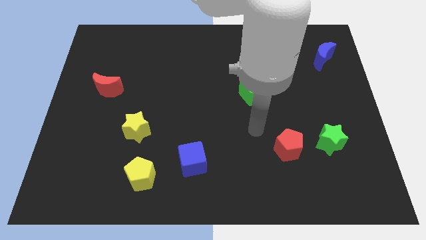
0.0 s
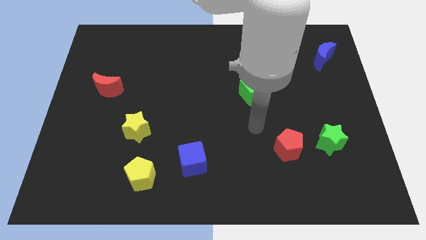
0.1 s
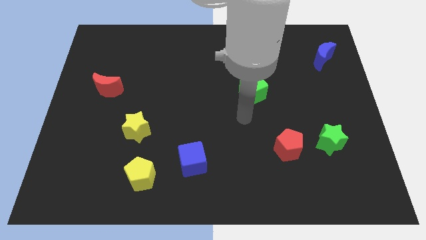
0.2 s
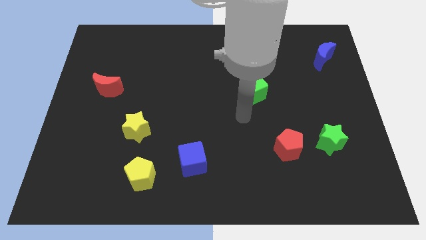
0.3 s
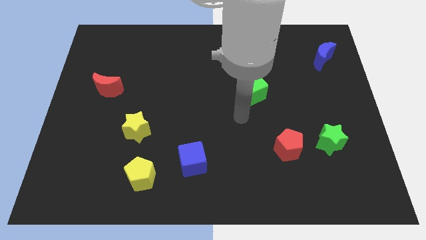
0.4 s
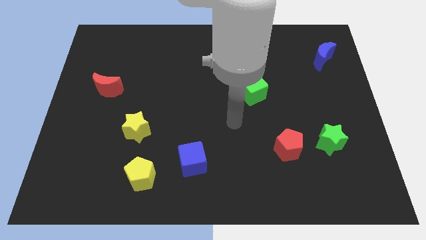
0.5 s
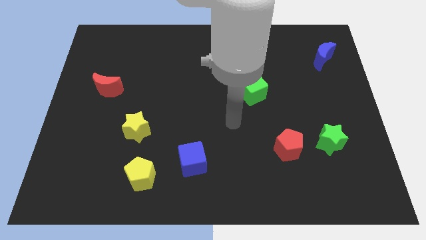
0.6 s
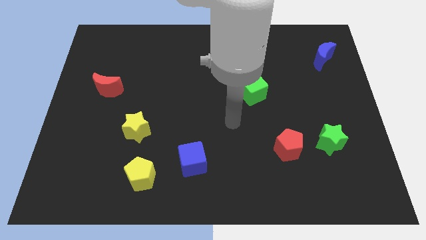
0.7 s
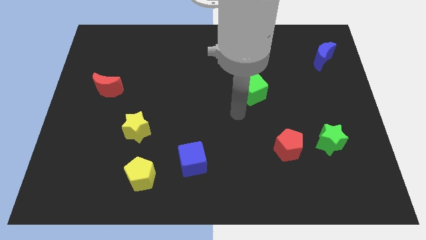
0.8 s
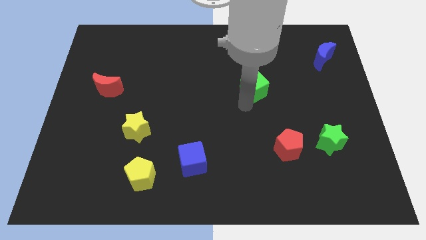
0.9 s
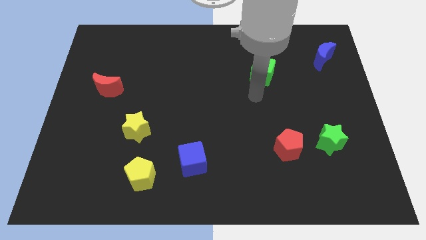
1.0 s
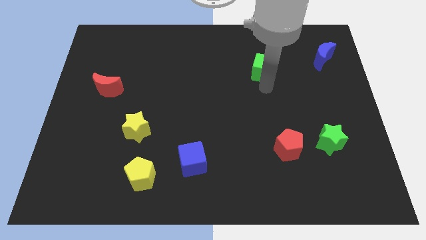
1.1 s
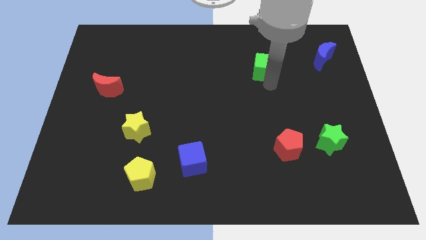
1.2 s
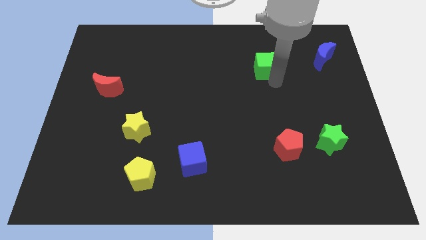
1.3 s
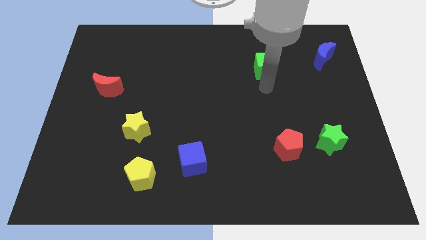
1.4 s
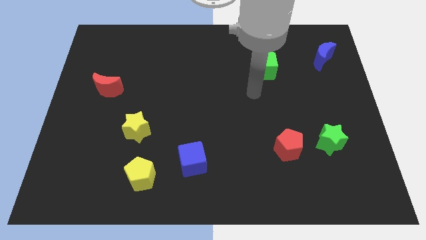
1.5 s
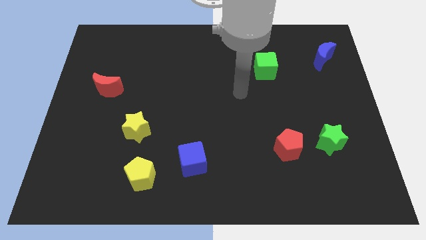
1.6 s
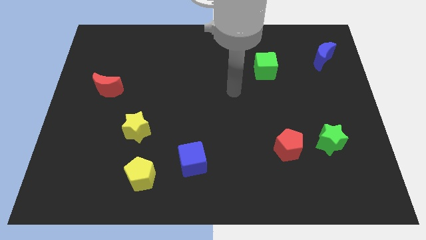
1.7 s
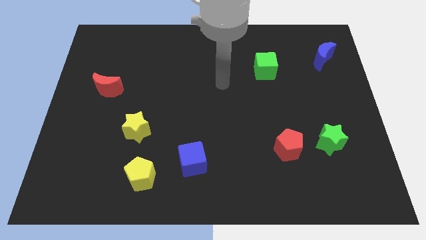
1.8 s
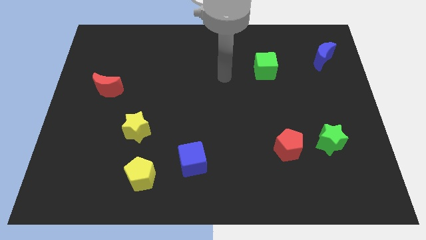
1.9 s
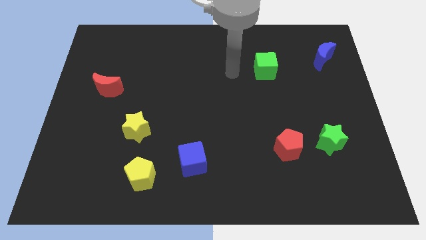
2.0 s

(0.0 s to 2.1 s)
push the green cube towards the top side

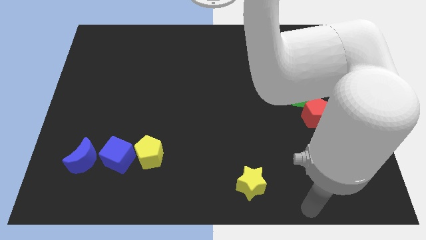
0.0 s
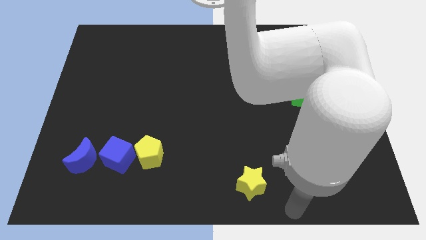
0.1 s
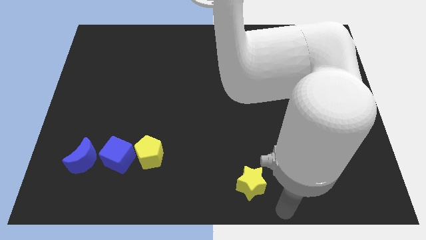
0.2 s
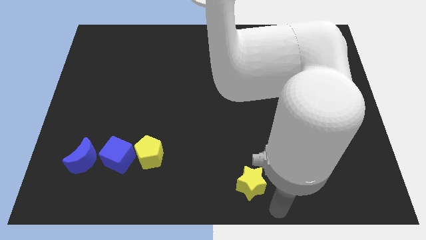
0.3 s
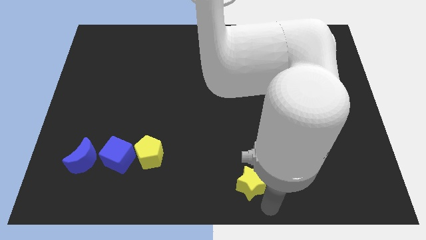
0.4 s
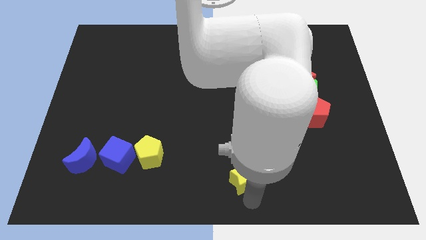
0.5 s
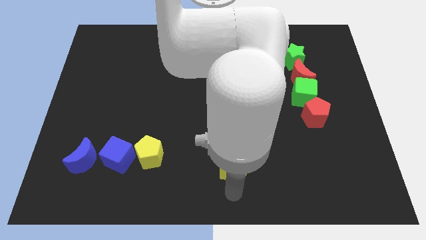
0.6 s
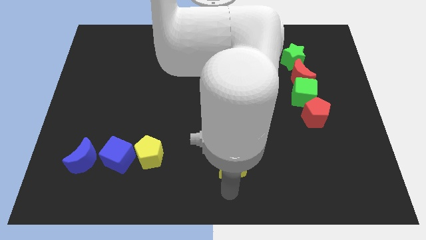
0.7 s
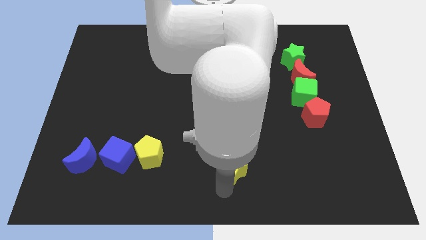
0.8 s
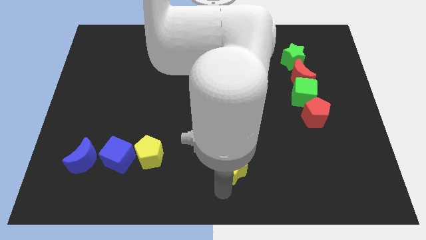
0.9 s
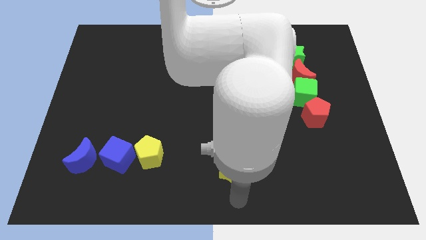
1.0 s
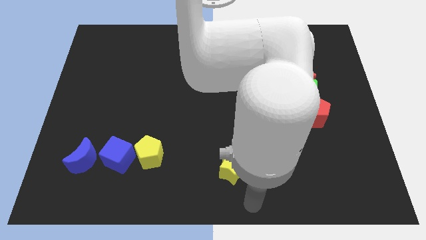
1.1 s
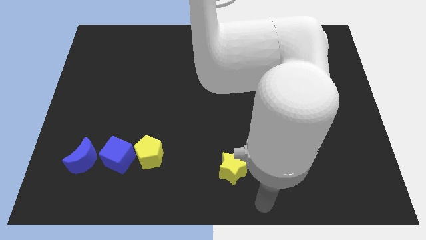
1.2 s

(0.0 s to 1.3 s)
push the yellow star to the bottom center

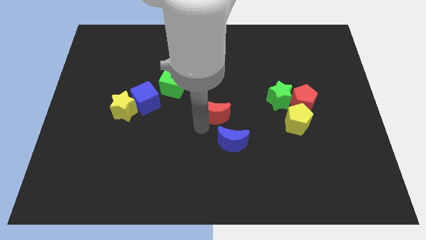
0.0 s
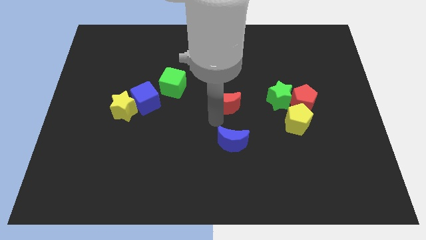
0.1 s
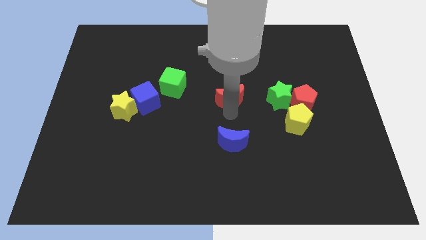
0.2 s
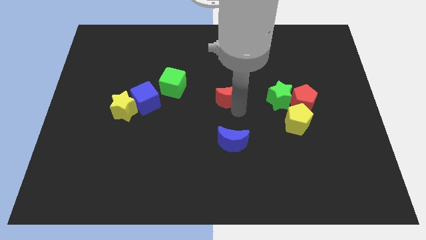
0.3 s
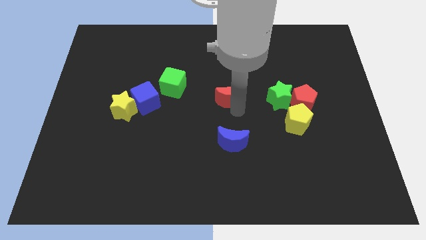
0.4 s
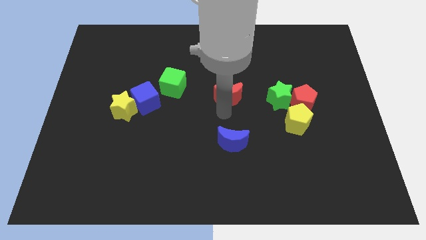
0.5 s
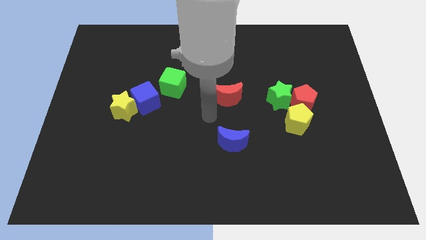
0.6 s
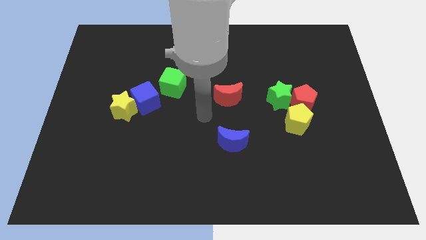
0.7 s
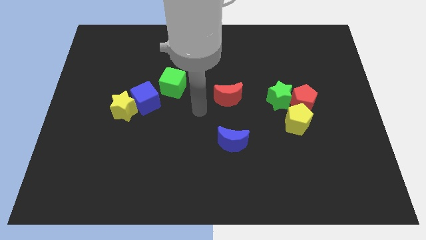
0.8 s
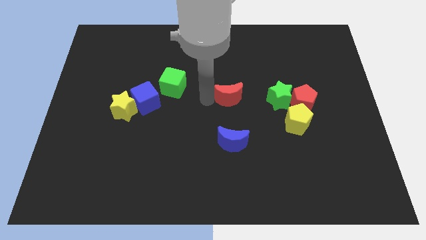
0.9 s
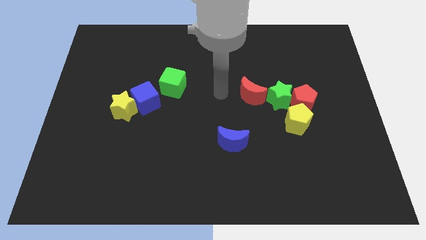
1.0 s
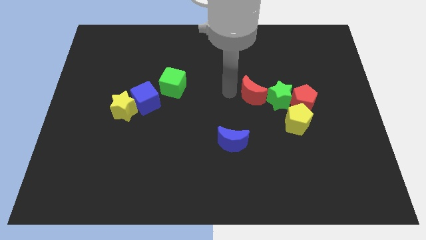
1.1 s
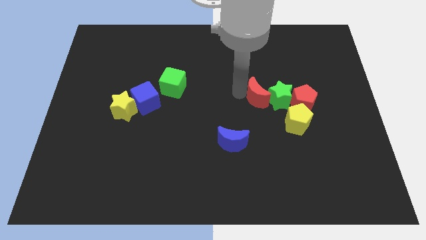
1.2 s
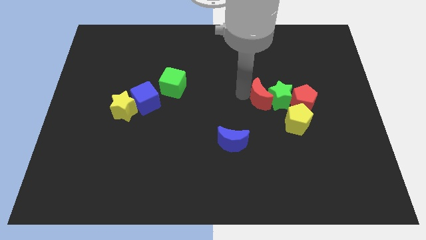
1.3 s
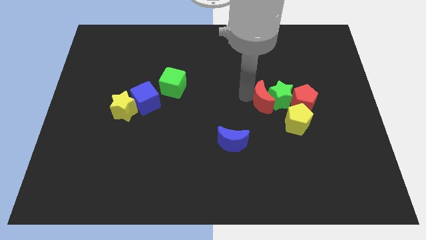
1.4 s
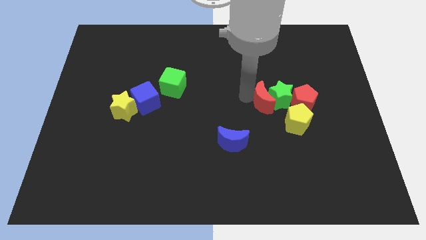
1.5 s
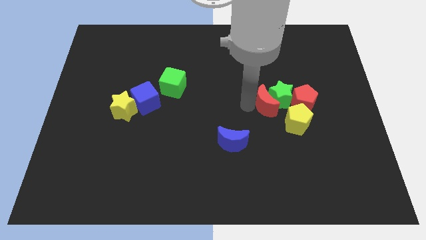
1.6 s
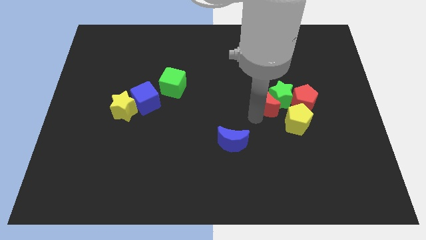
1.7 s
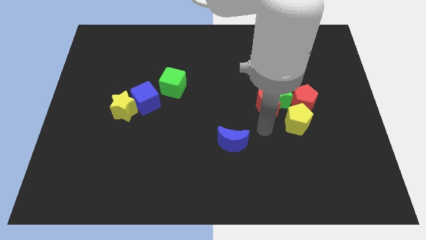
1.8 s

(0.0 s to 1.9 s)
push the red moon towards the left side of the green star

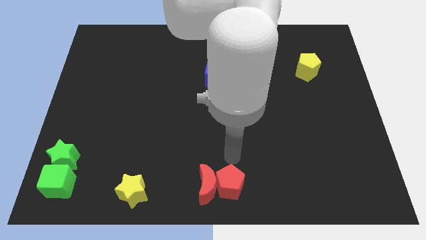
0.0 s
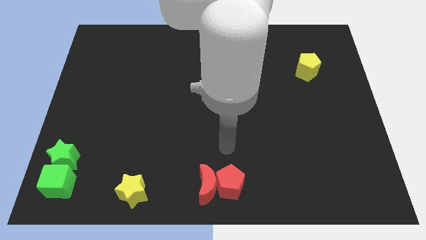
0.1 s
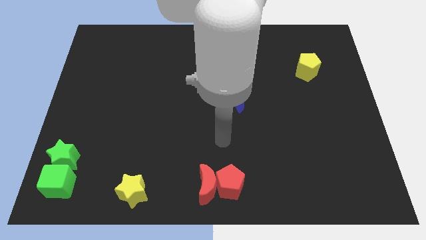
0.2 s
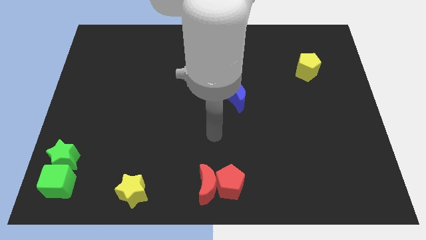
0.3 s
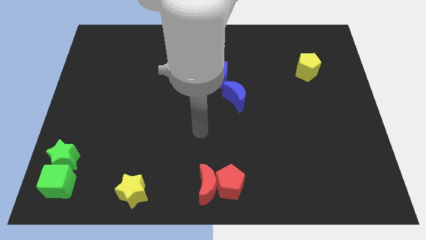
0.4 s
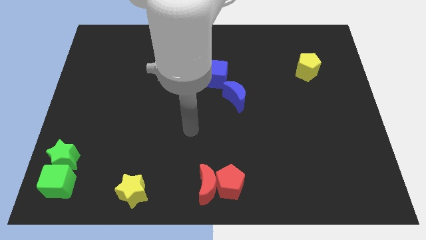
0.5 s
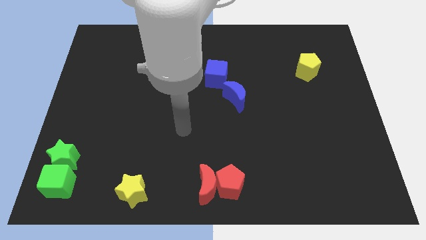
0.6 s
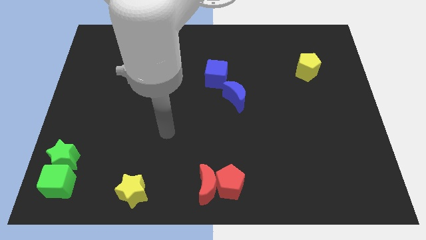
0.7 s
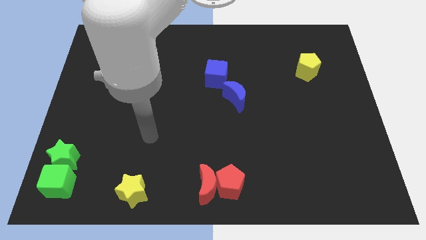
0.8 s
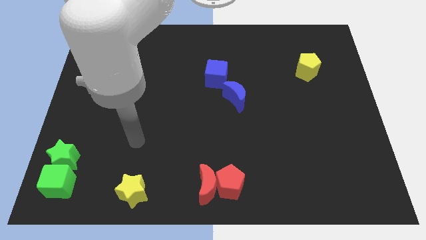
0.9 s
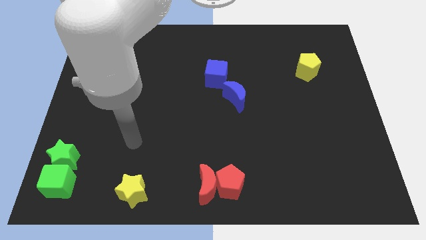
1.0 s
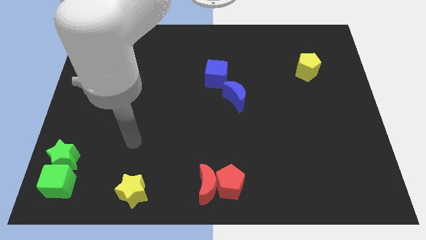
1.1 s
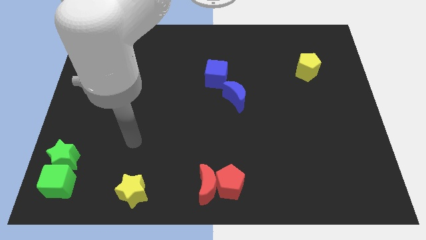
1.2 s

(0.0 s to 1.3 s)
point your arm above the yellow star

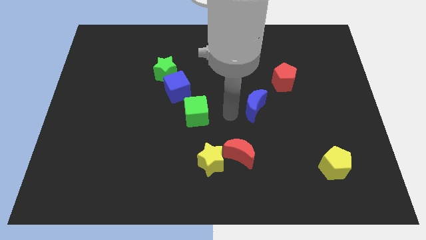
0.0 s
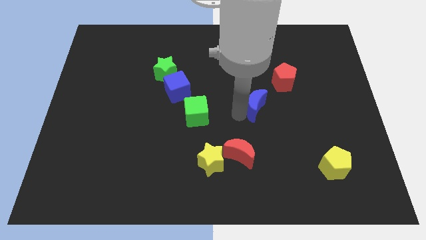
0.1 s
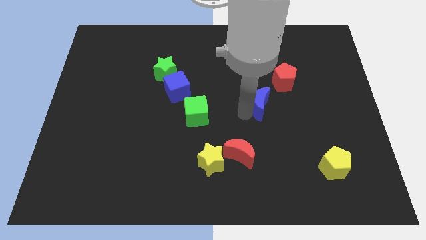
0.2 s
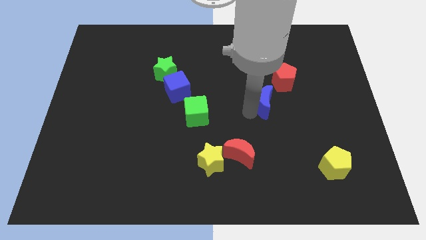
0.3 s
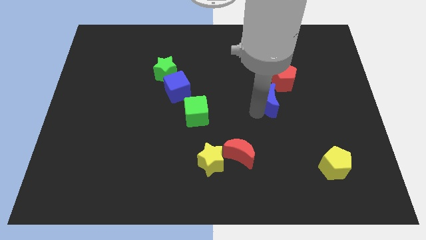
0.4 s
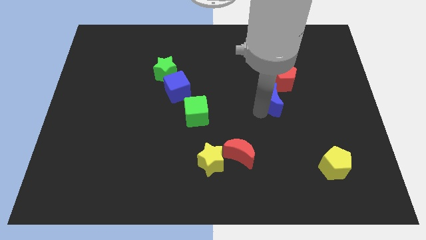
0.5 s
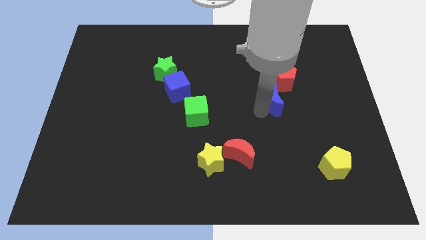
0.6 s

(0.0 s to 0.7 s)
push blue moon towards right

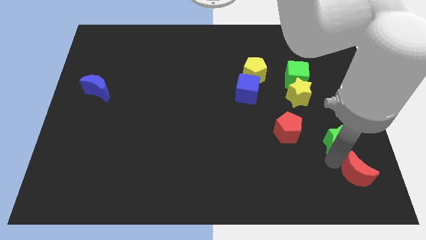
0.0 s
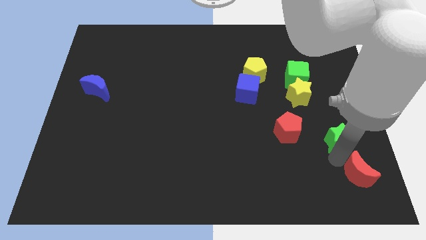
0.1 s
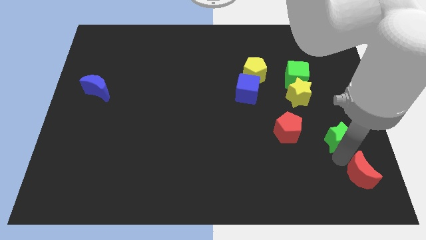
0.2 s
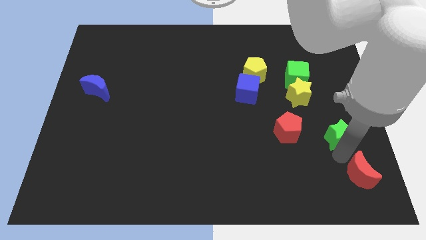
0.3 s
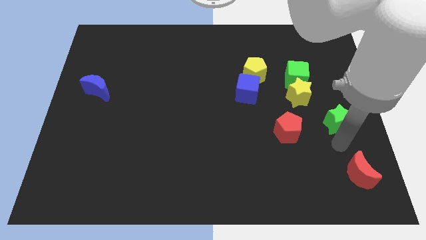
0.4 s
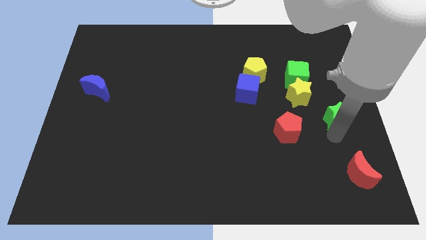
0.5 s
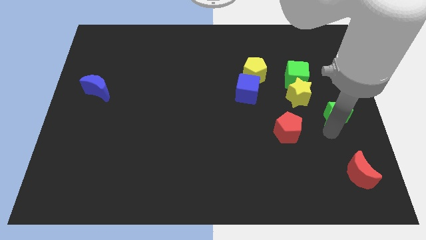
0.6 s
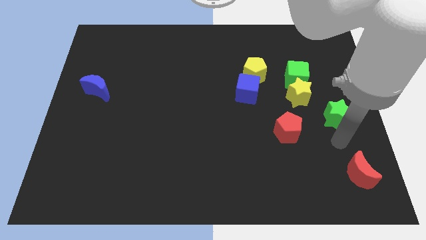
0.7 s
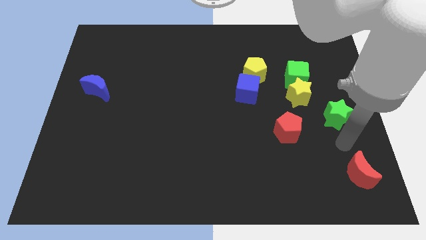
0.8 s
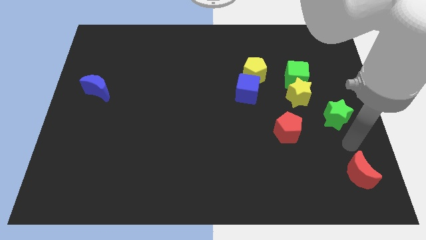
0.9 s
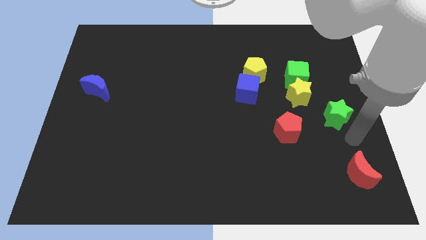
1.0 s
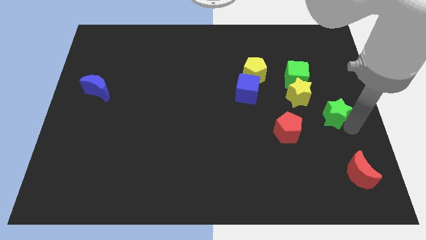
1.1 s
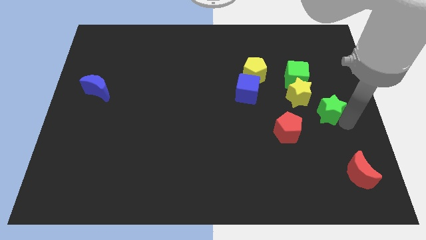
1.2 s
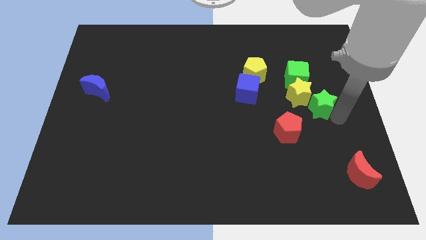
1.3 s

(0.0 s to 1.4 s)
place green star to the bottom right of yellow star

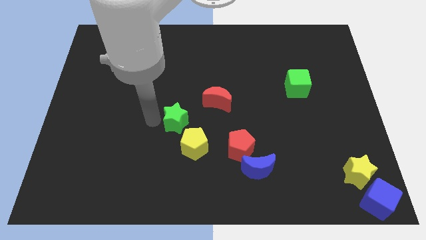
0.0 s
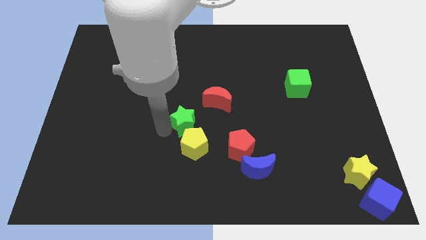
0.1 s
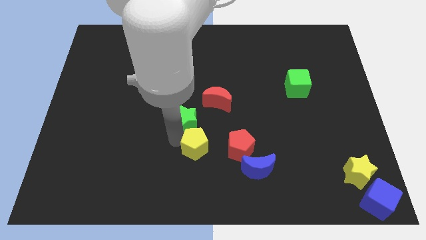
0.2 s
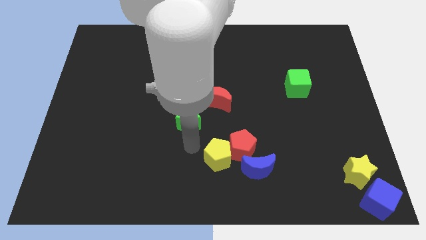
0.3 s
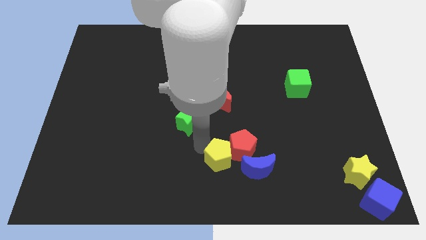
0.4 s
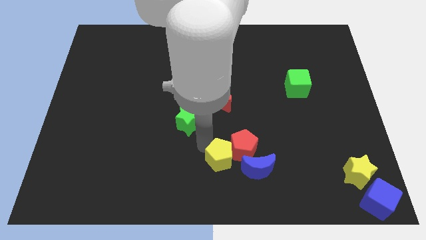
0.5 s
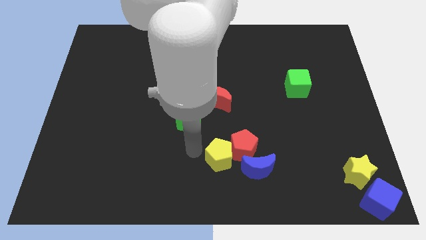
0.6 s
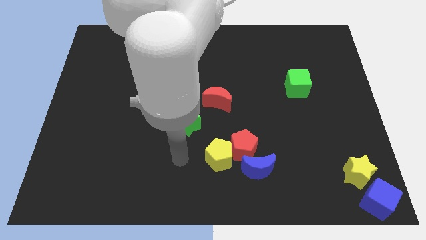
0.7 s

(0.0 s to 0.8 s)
move the yellow pentagon into the left side of the red pentagon
